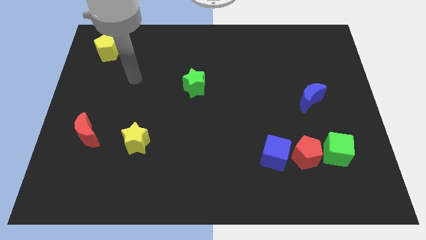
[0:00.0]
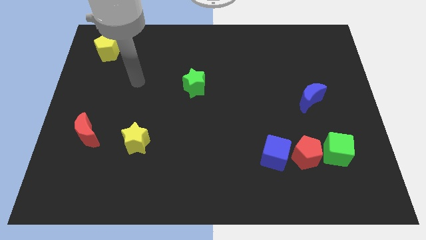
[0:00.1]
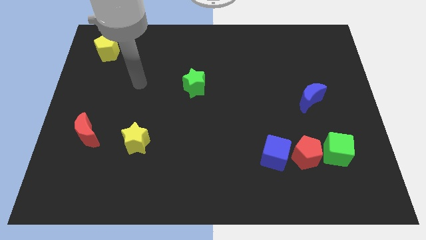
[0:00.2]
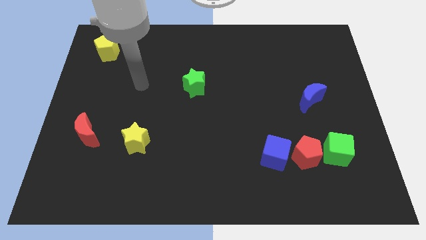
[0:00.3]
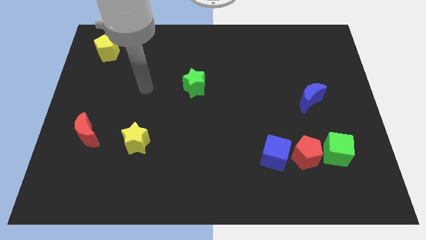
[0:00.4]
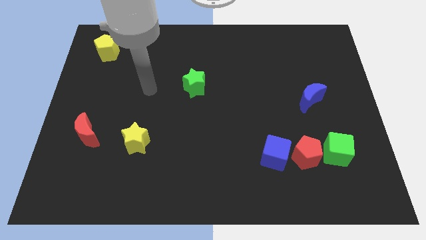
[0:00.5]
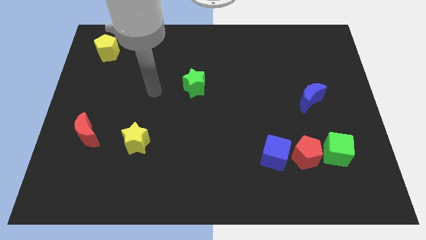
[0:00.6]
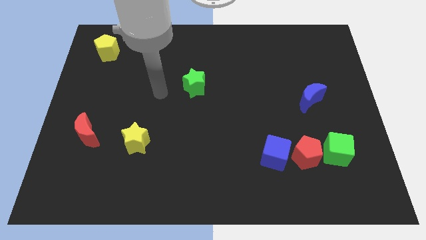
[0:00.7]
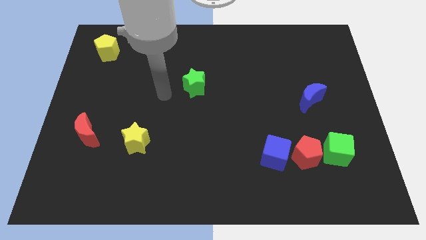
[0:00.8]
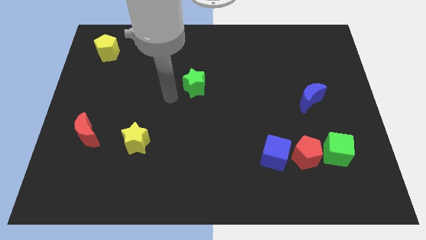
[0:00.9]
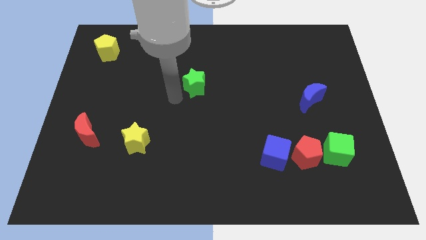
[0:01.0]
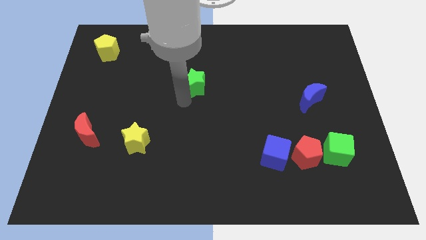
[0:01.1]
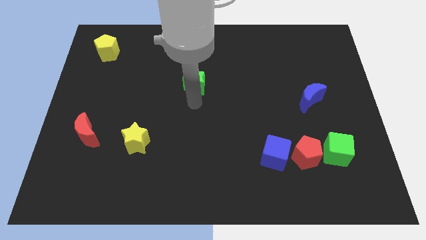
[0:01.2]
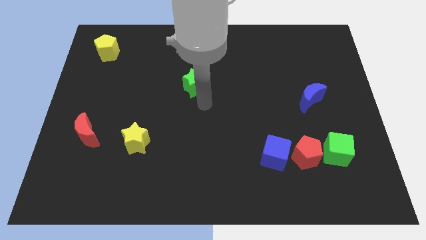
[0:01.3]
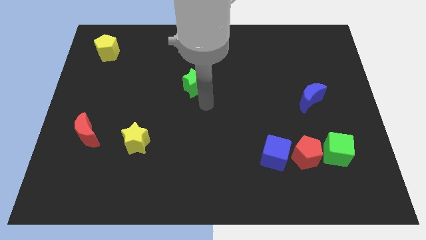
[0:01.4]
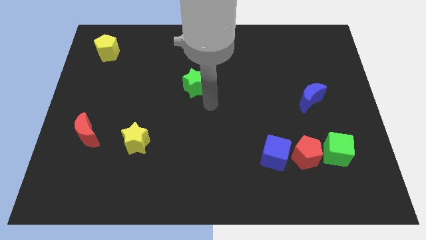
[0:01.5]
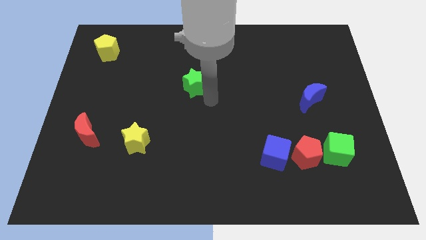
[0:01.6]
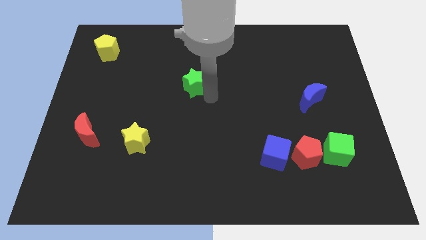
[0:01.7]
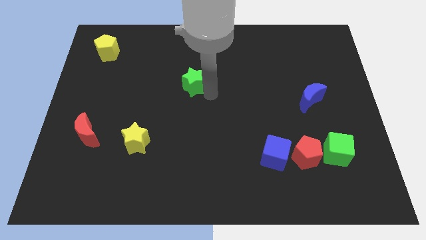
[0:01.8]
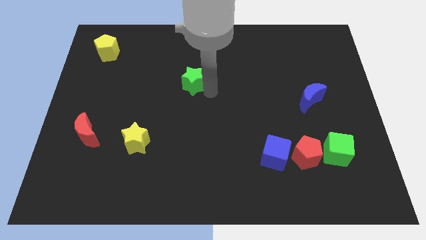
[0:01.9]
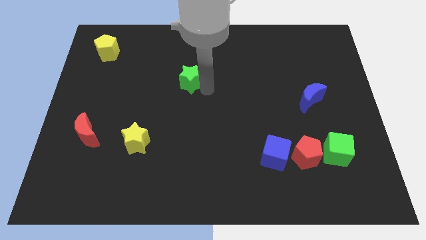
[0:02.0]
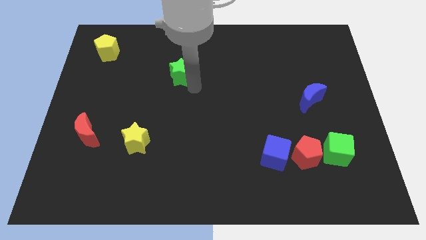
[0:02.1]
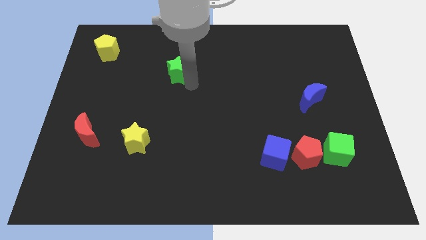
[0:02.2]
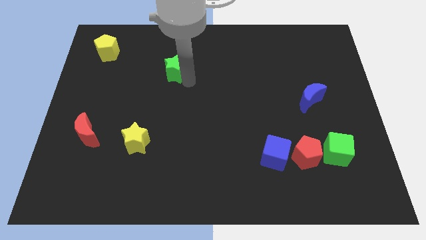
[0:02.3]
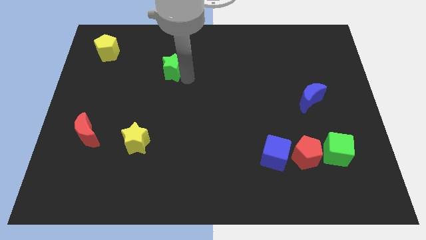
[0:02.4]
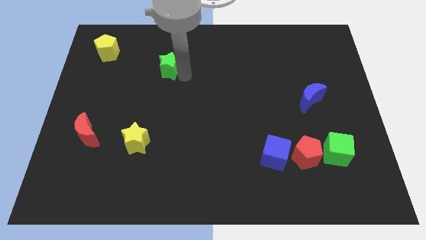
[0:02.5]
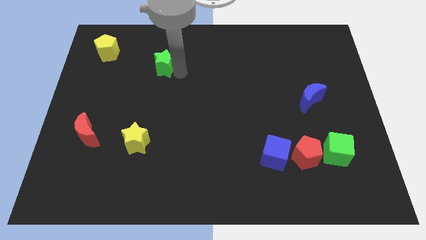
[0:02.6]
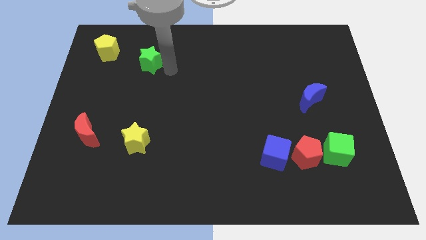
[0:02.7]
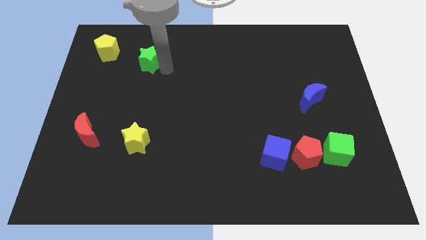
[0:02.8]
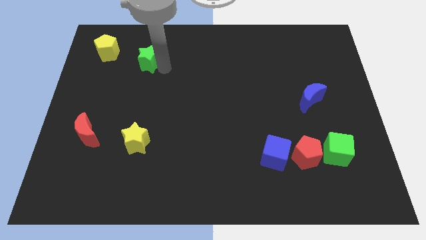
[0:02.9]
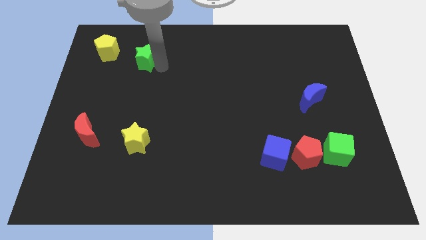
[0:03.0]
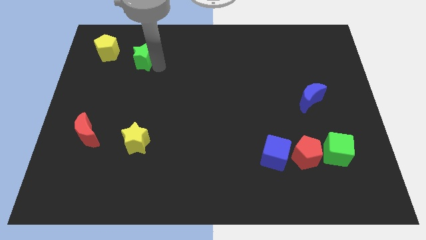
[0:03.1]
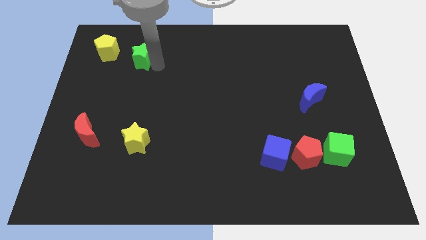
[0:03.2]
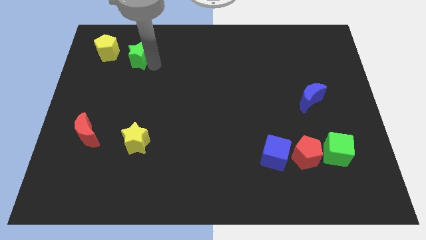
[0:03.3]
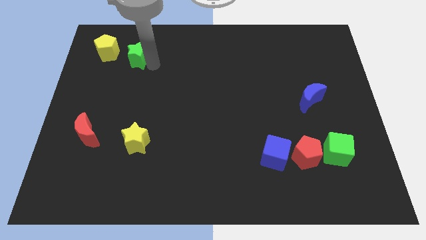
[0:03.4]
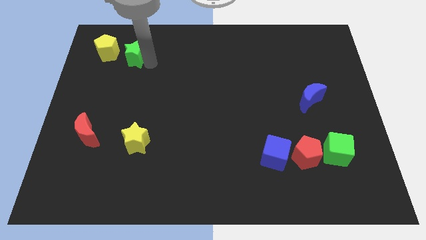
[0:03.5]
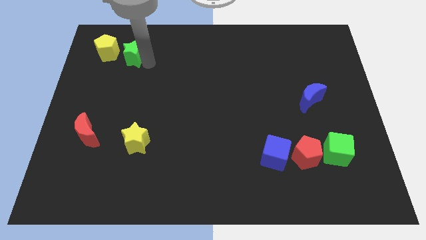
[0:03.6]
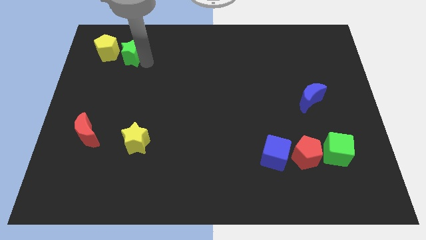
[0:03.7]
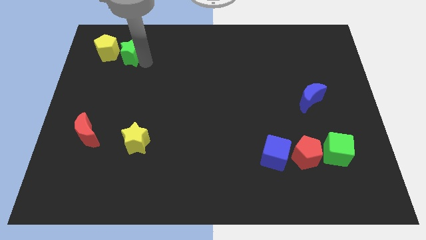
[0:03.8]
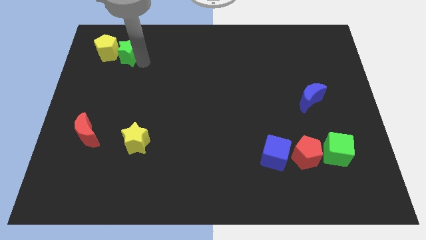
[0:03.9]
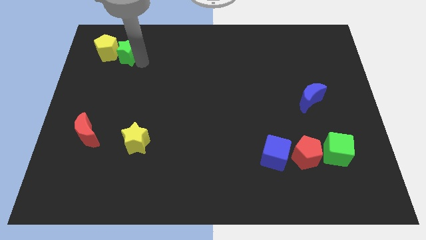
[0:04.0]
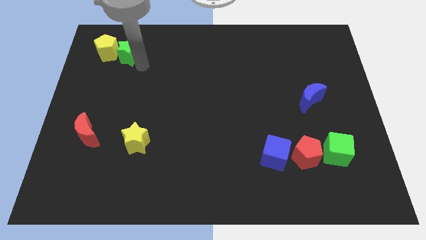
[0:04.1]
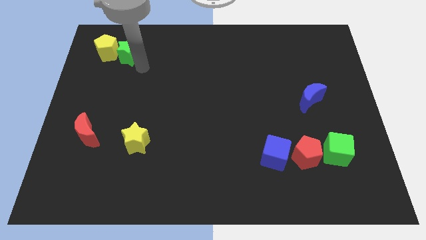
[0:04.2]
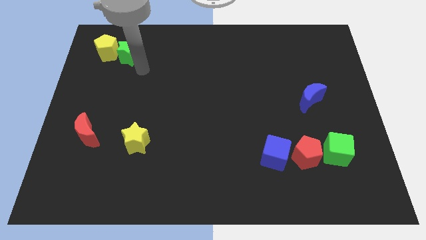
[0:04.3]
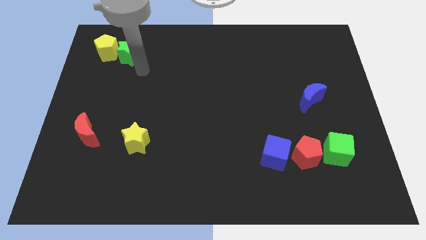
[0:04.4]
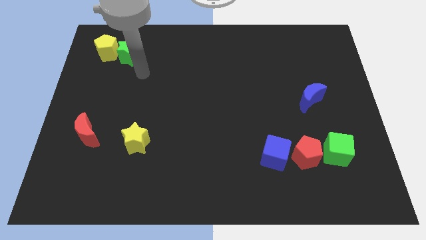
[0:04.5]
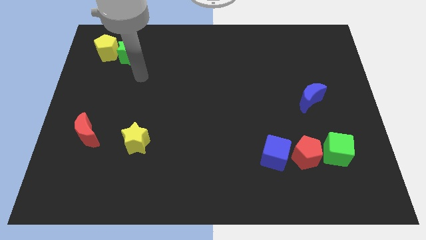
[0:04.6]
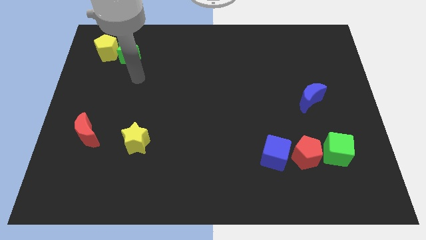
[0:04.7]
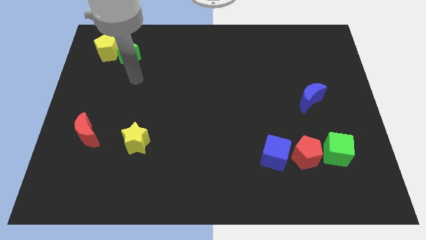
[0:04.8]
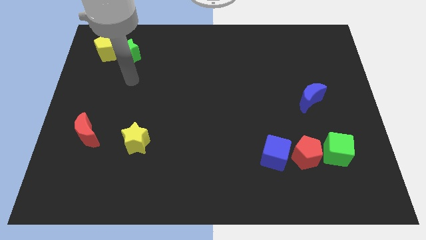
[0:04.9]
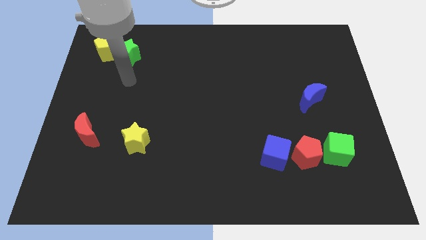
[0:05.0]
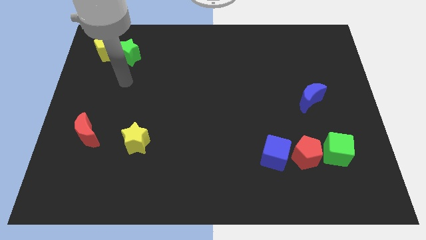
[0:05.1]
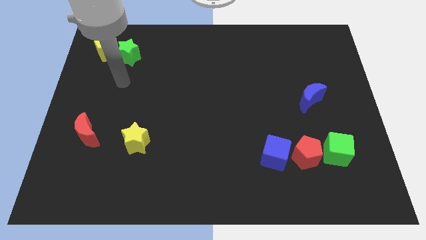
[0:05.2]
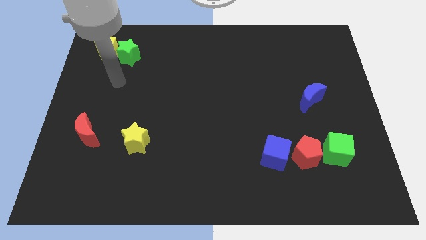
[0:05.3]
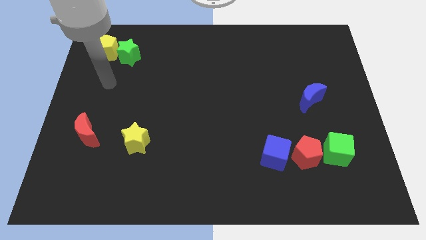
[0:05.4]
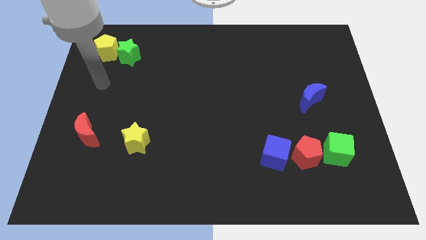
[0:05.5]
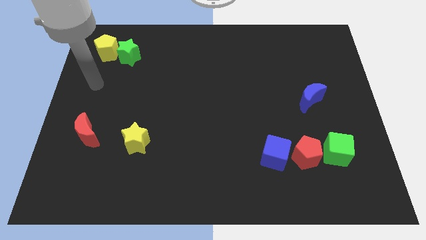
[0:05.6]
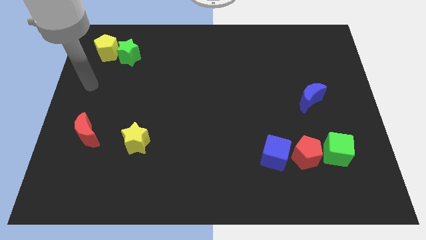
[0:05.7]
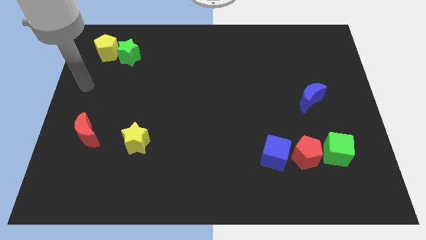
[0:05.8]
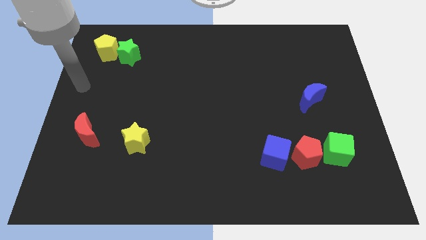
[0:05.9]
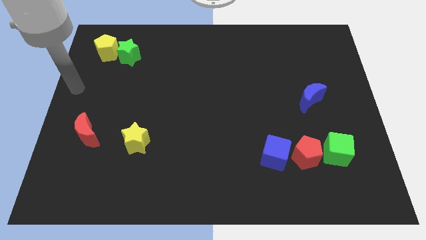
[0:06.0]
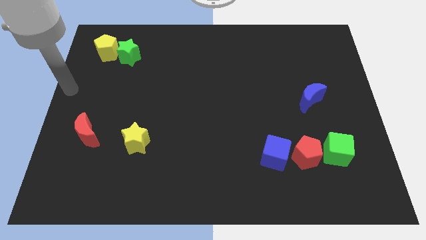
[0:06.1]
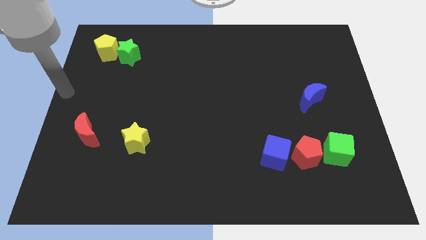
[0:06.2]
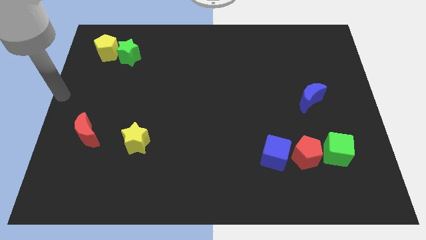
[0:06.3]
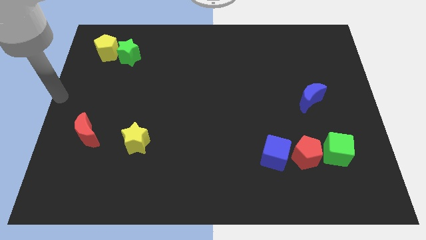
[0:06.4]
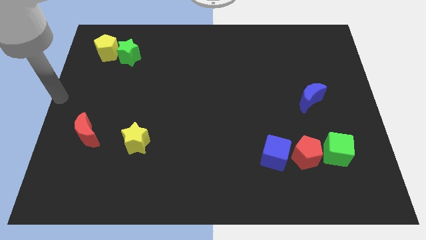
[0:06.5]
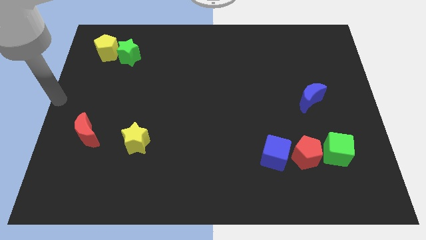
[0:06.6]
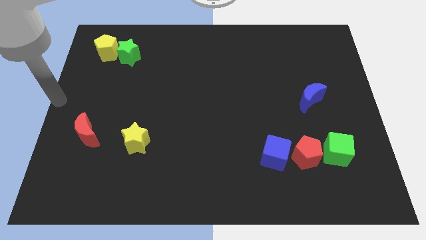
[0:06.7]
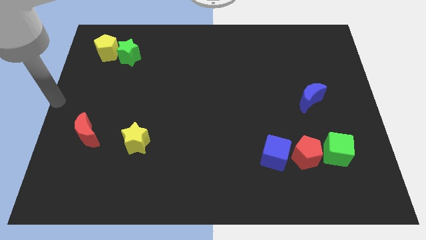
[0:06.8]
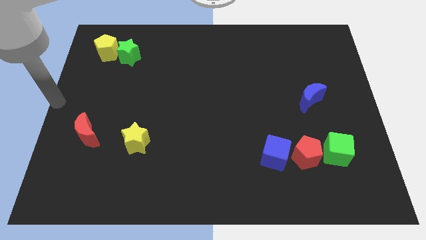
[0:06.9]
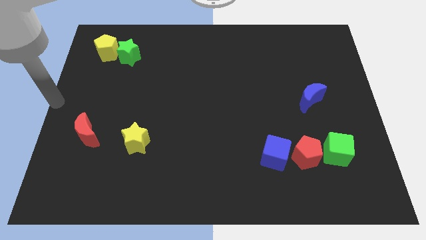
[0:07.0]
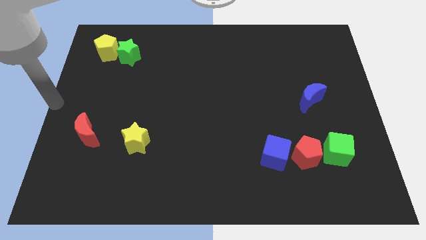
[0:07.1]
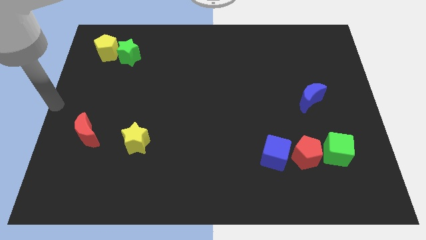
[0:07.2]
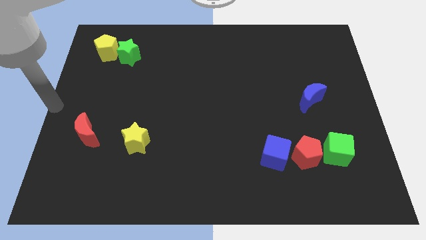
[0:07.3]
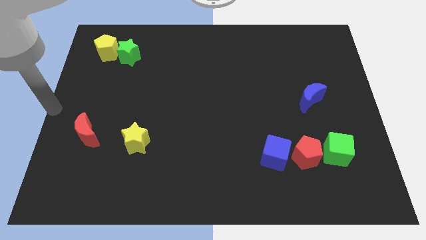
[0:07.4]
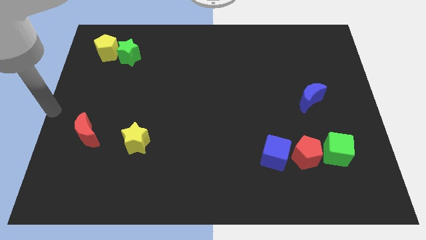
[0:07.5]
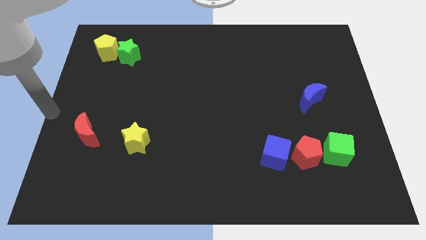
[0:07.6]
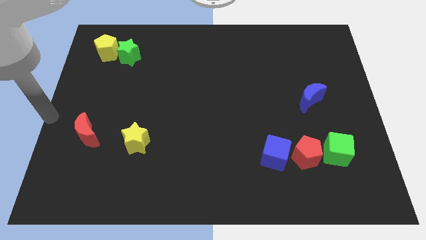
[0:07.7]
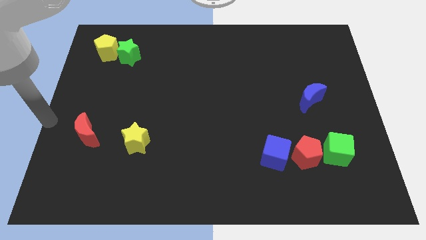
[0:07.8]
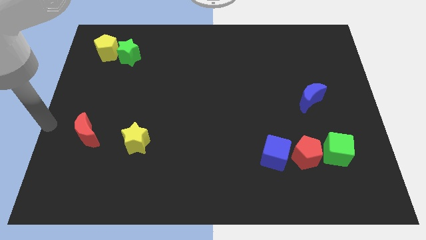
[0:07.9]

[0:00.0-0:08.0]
push the green star to the top left side of the board

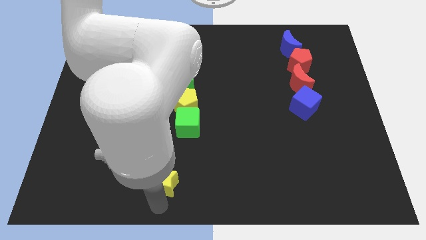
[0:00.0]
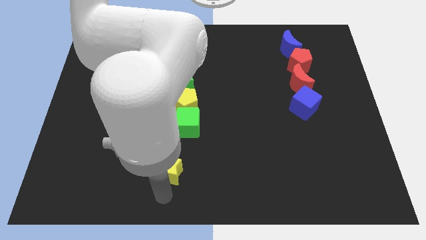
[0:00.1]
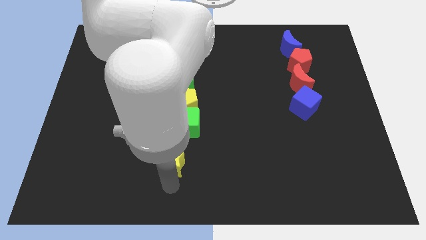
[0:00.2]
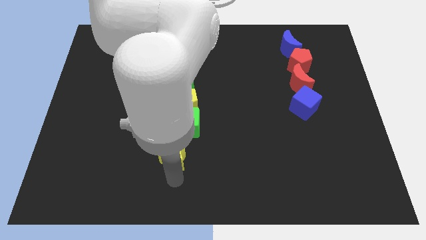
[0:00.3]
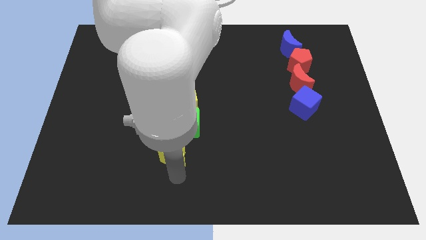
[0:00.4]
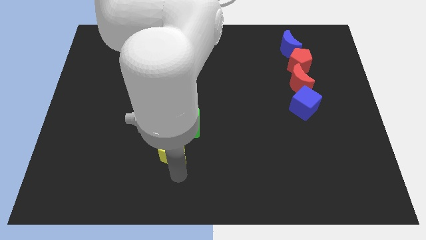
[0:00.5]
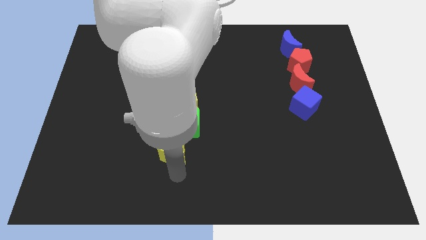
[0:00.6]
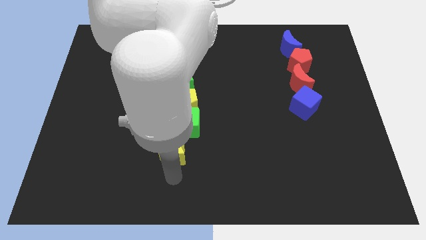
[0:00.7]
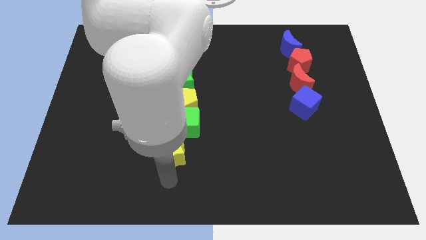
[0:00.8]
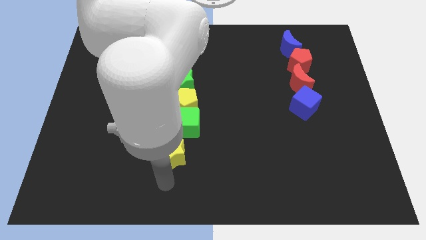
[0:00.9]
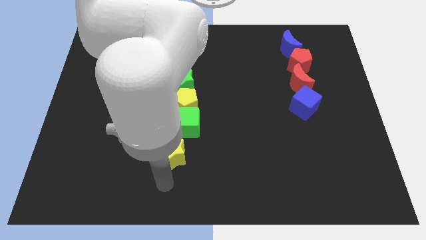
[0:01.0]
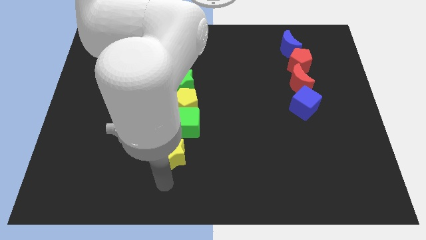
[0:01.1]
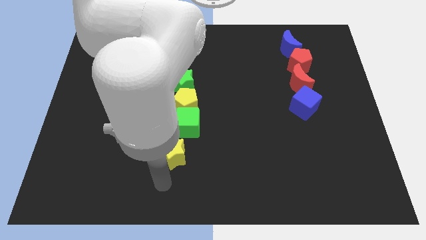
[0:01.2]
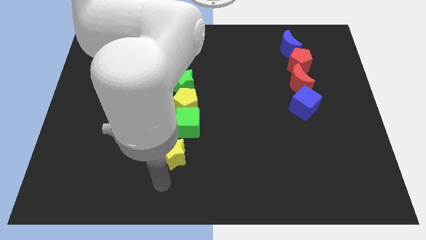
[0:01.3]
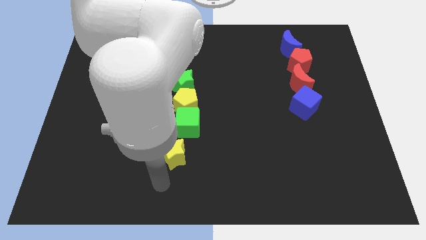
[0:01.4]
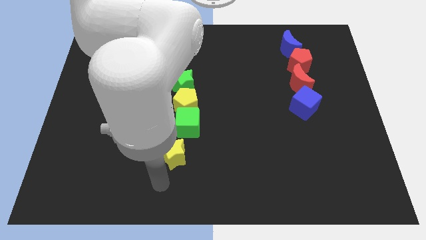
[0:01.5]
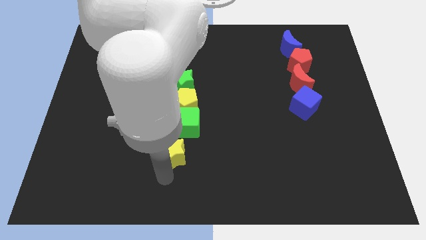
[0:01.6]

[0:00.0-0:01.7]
push the yellow star into the green cube
